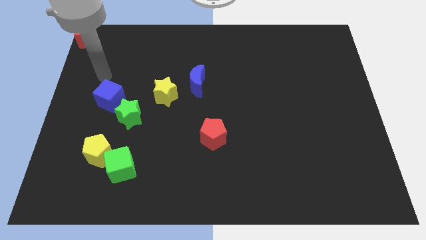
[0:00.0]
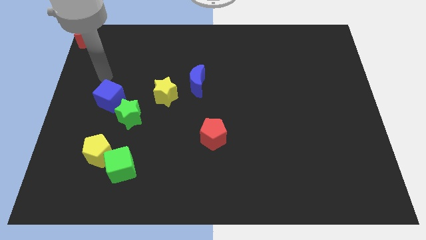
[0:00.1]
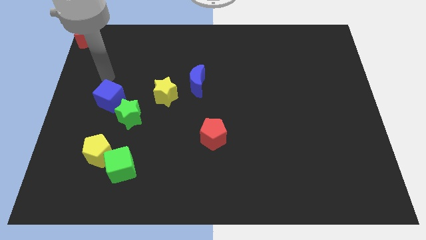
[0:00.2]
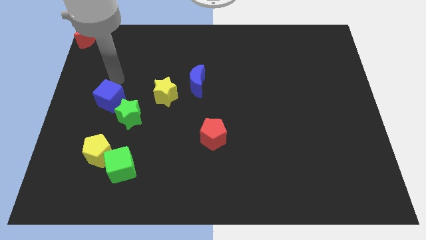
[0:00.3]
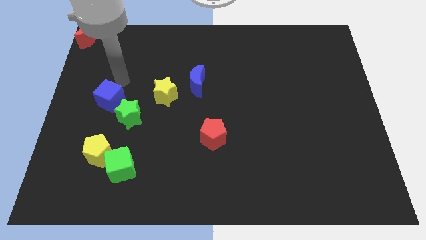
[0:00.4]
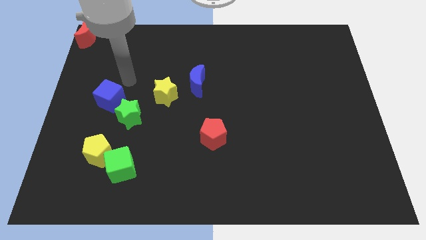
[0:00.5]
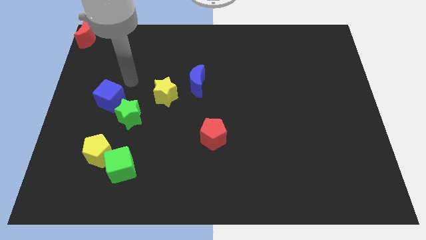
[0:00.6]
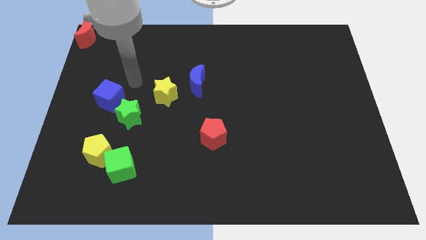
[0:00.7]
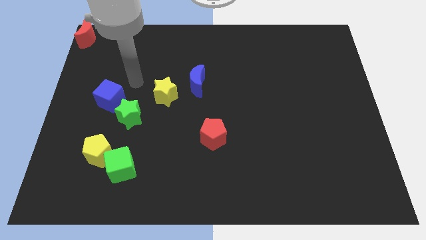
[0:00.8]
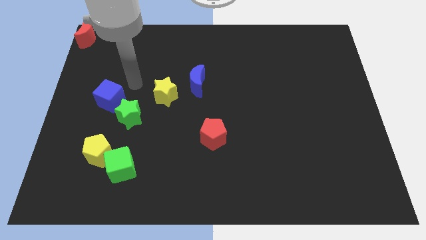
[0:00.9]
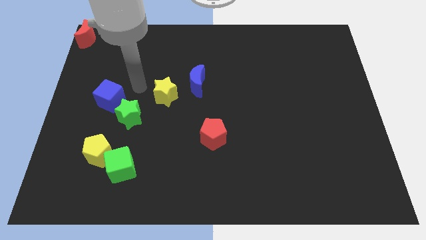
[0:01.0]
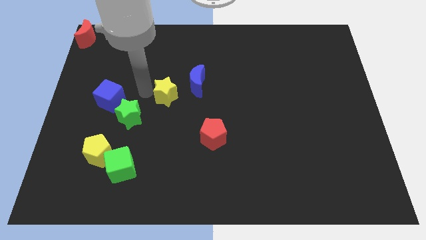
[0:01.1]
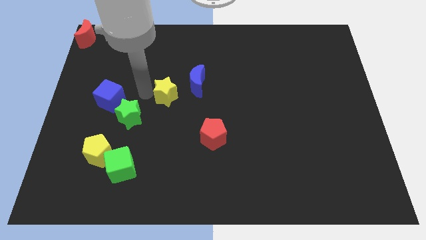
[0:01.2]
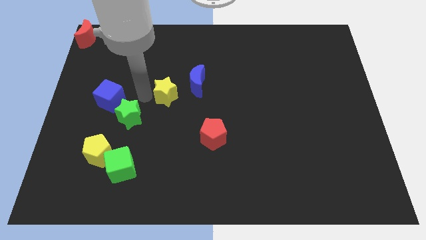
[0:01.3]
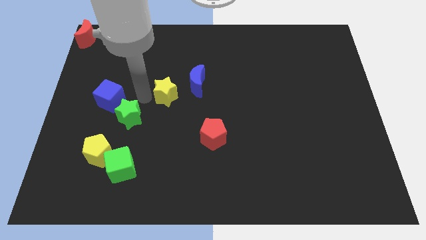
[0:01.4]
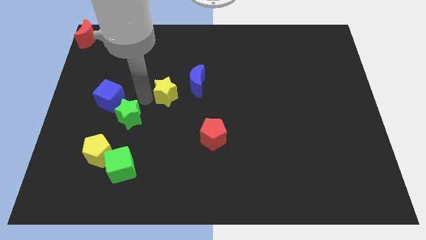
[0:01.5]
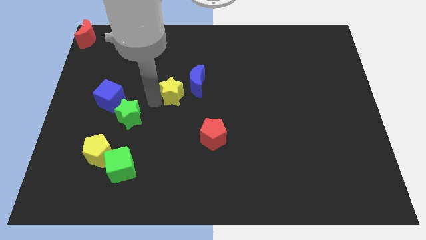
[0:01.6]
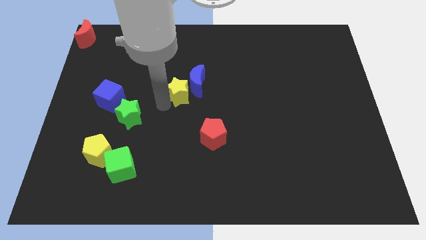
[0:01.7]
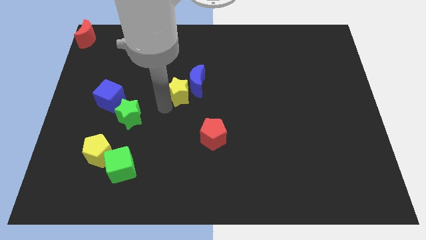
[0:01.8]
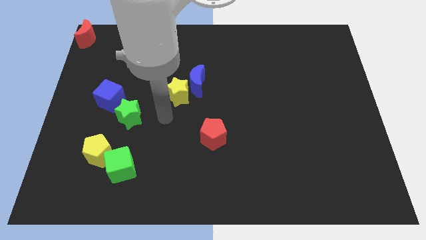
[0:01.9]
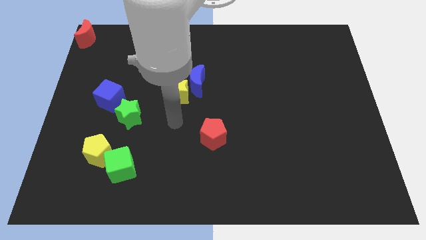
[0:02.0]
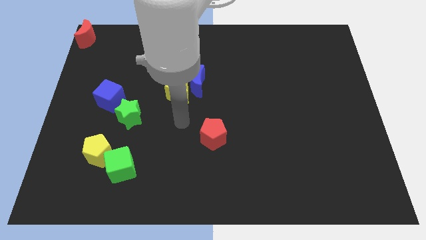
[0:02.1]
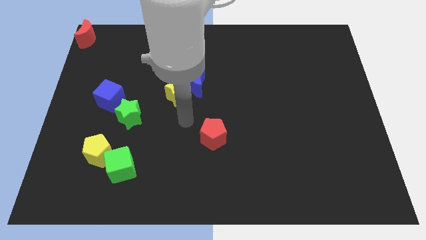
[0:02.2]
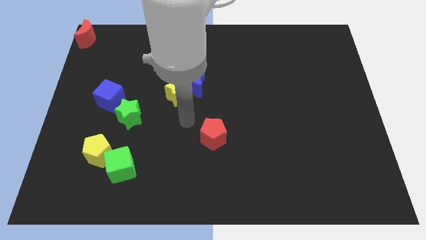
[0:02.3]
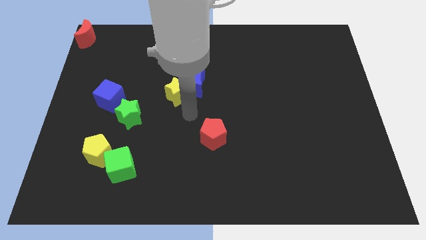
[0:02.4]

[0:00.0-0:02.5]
push the yellow star to the left of the blue crescent

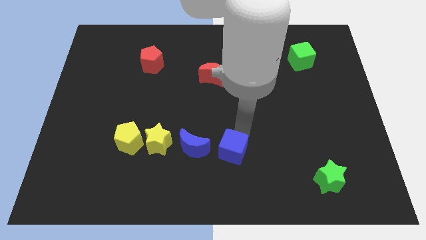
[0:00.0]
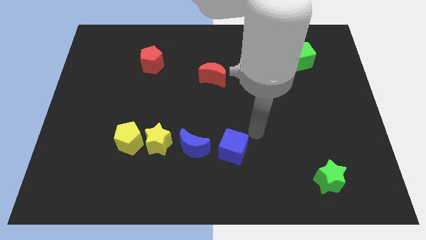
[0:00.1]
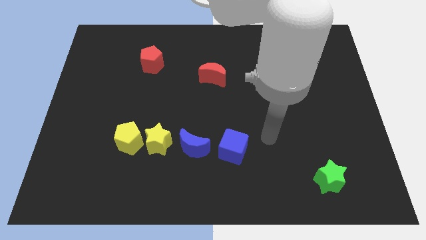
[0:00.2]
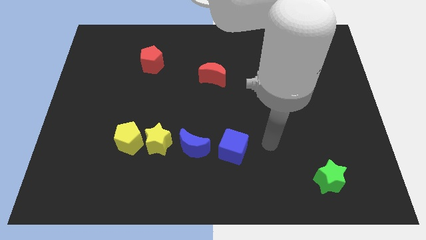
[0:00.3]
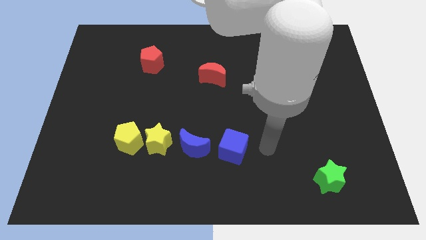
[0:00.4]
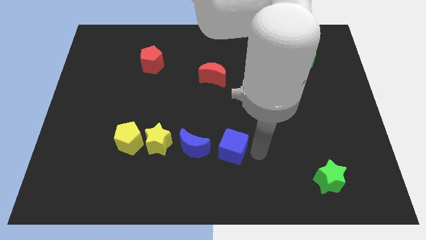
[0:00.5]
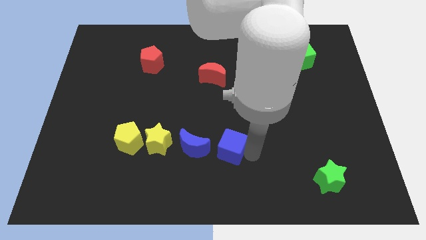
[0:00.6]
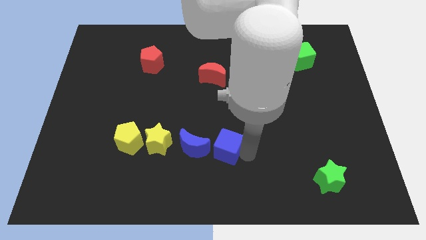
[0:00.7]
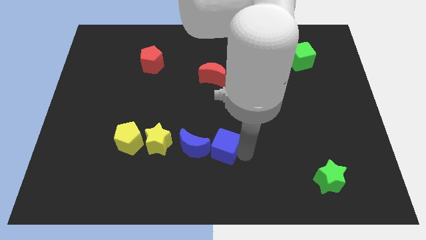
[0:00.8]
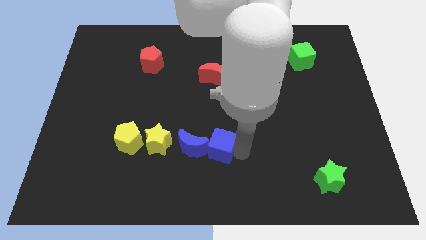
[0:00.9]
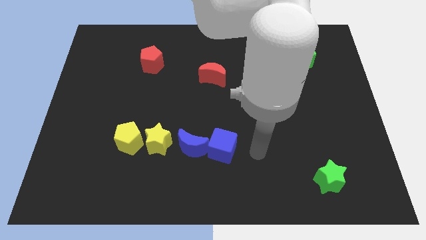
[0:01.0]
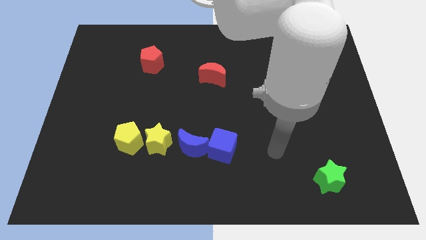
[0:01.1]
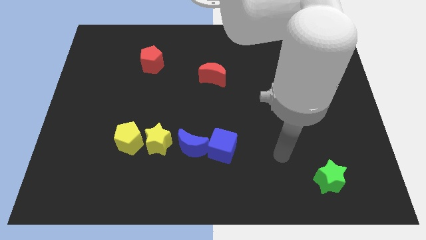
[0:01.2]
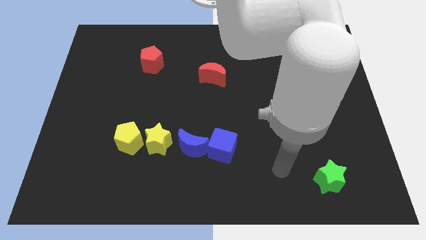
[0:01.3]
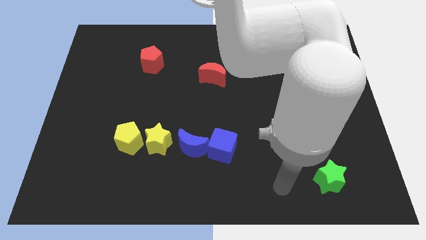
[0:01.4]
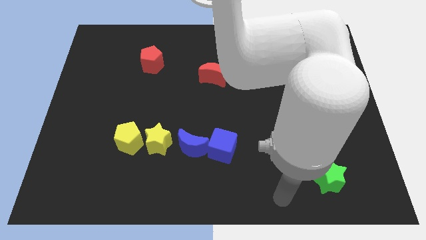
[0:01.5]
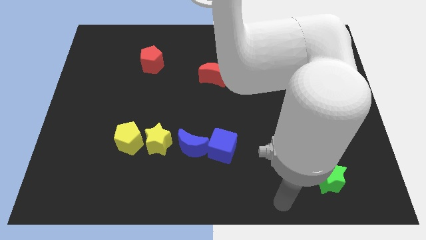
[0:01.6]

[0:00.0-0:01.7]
push blue cube into the blue crescent

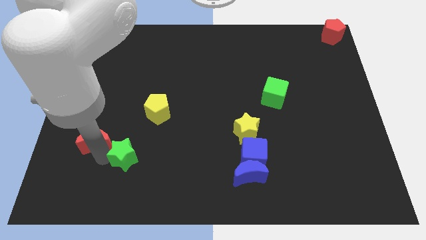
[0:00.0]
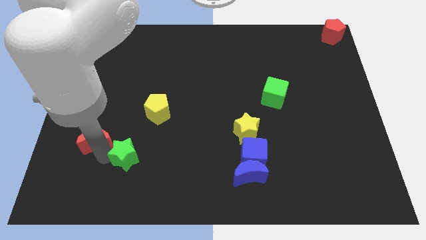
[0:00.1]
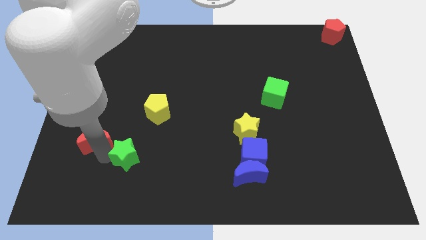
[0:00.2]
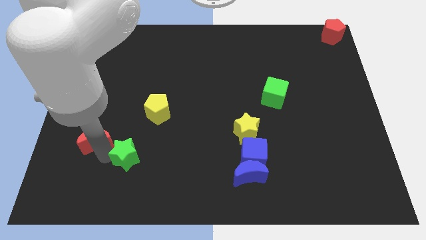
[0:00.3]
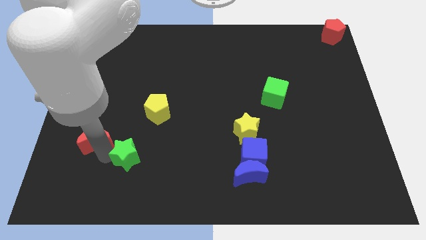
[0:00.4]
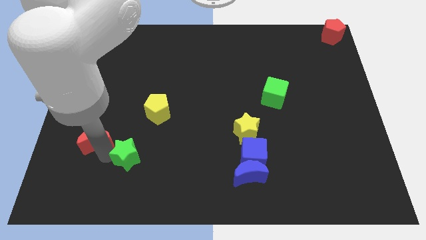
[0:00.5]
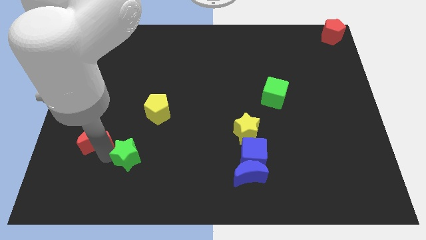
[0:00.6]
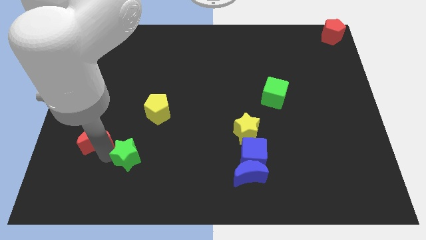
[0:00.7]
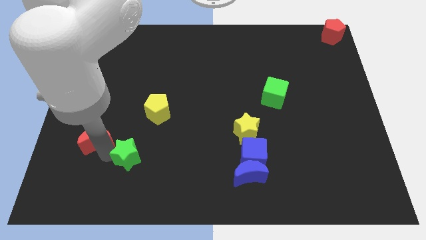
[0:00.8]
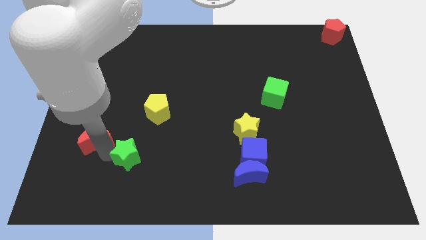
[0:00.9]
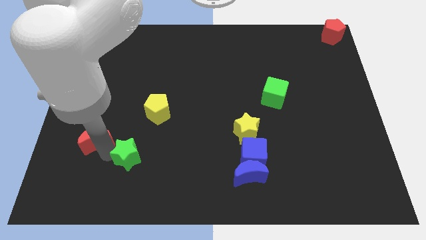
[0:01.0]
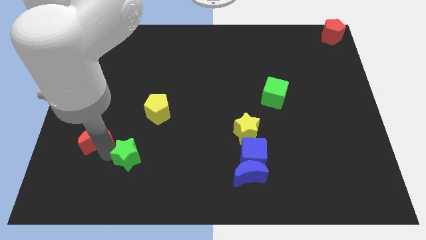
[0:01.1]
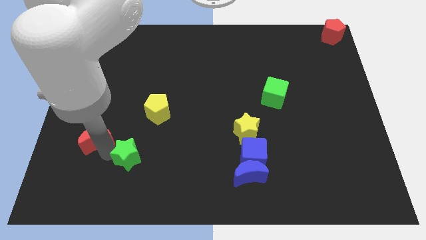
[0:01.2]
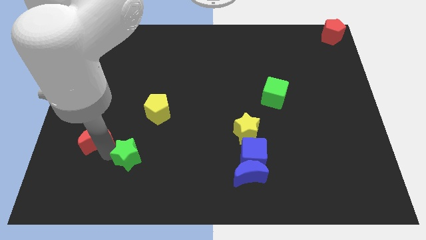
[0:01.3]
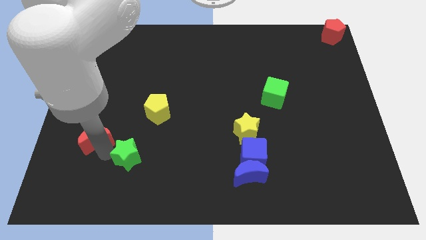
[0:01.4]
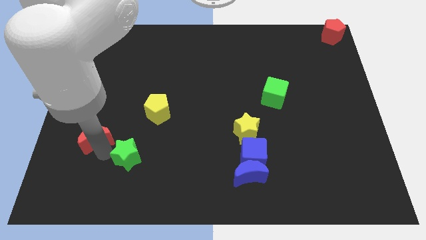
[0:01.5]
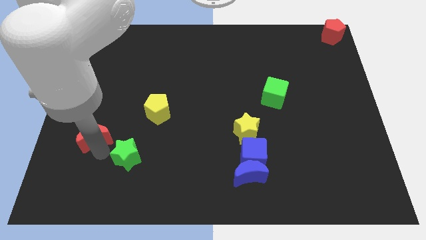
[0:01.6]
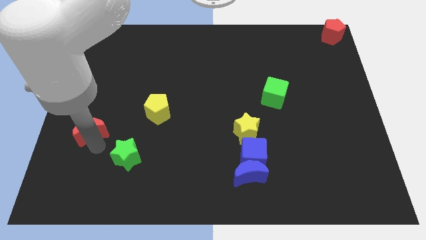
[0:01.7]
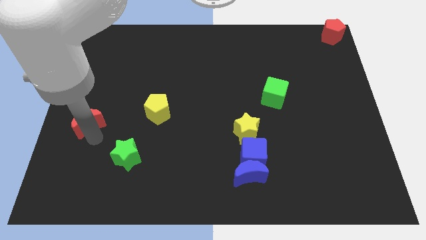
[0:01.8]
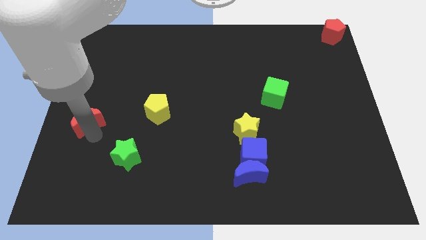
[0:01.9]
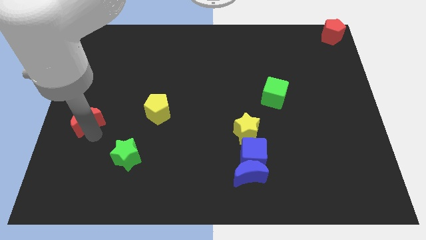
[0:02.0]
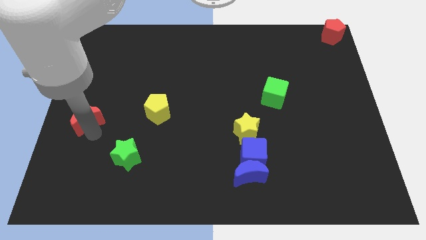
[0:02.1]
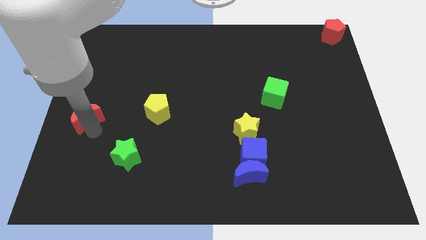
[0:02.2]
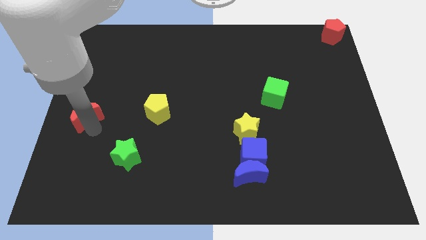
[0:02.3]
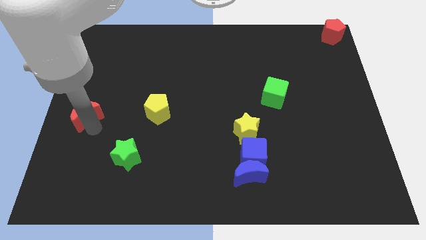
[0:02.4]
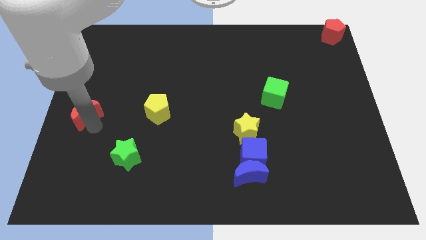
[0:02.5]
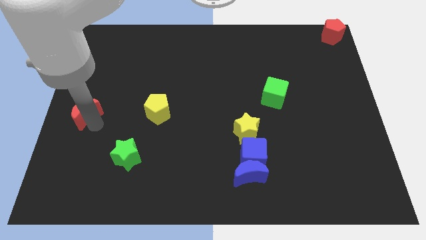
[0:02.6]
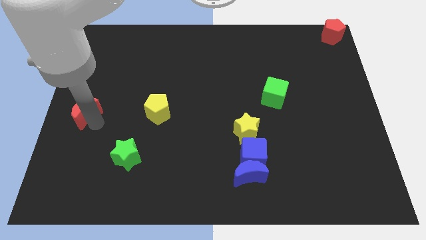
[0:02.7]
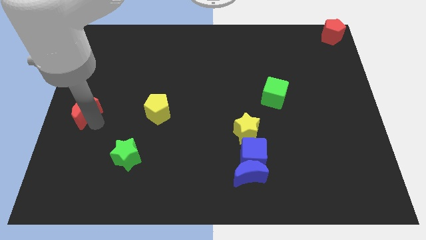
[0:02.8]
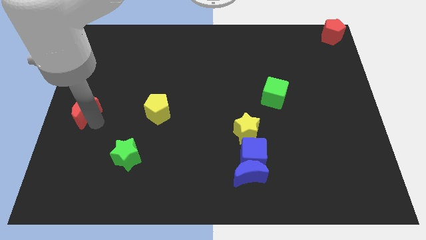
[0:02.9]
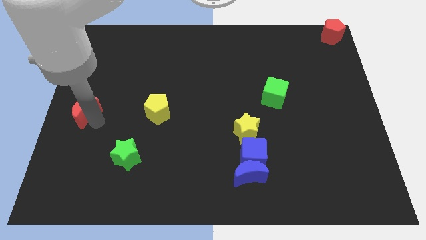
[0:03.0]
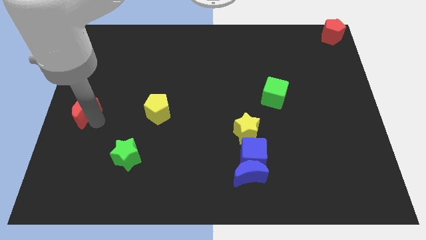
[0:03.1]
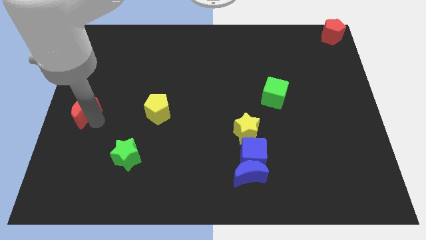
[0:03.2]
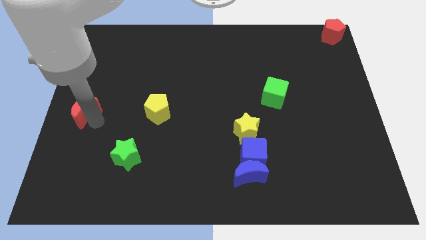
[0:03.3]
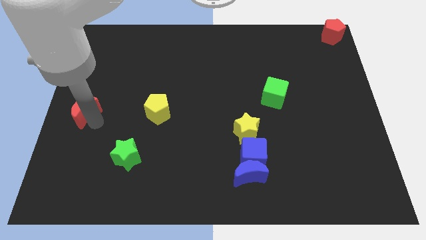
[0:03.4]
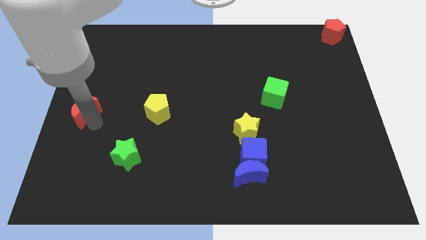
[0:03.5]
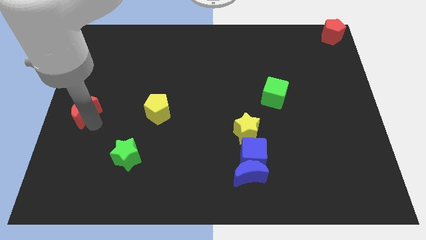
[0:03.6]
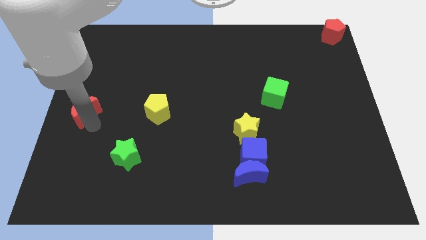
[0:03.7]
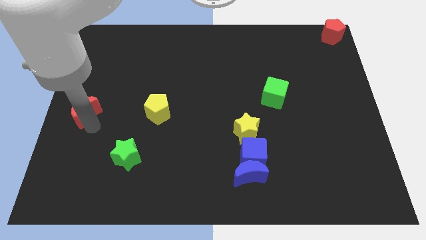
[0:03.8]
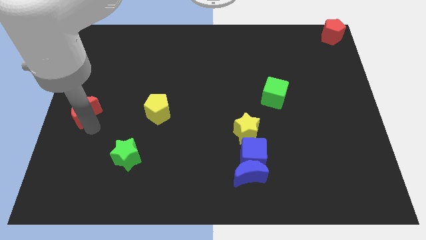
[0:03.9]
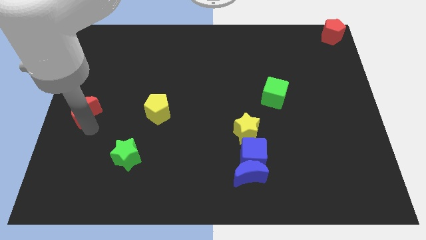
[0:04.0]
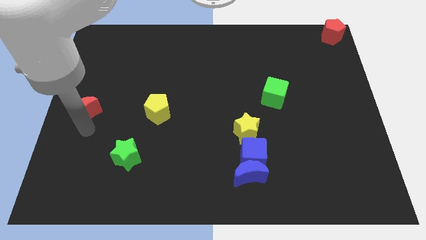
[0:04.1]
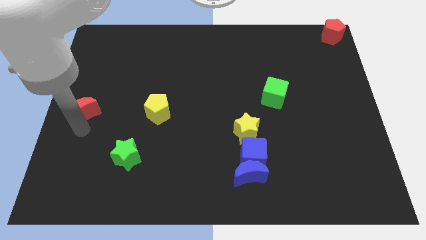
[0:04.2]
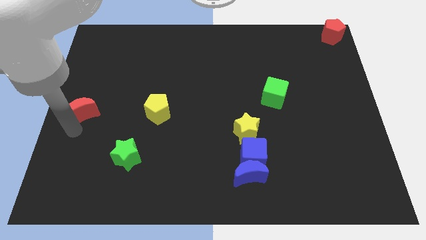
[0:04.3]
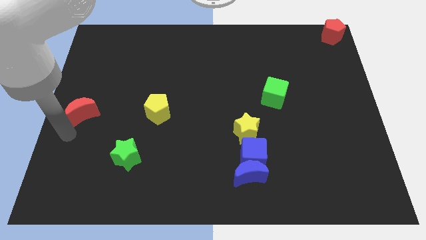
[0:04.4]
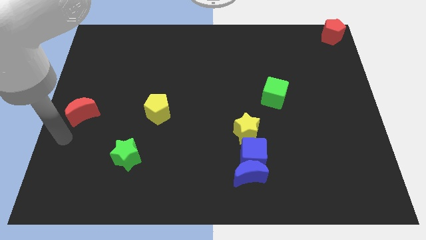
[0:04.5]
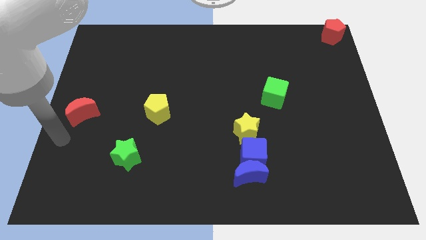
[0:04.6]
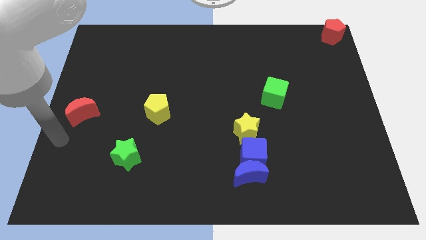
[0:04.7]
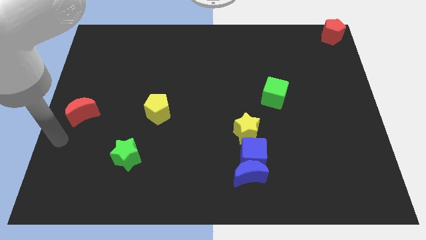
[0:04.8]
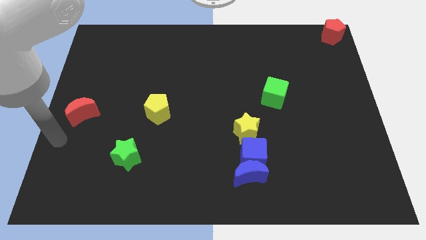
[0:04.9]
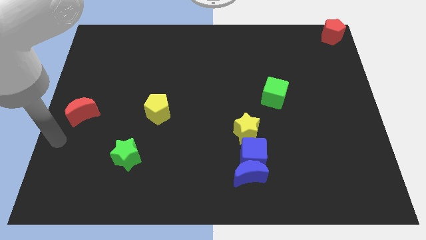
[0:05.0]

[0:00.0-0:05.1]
separate the red moon and the gren star
